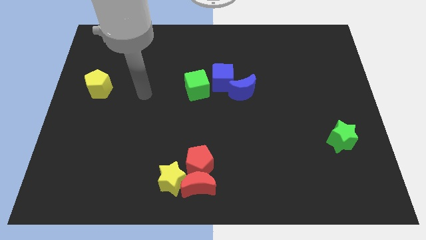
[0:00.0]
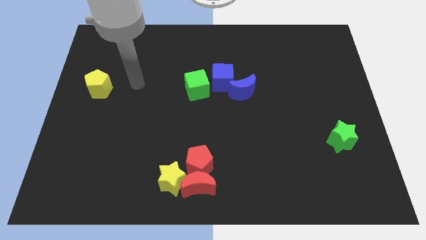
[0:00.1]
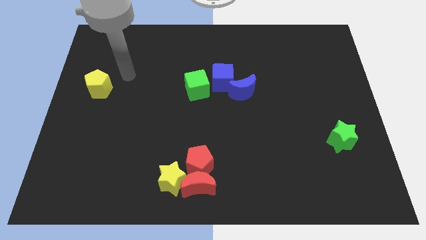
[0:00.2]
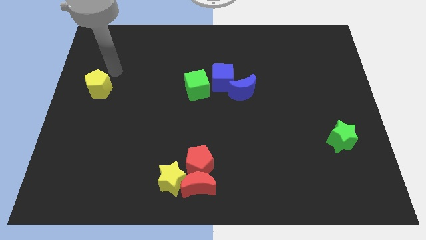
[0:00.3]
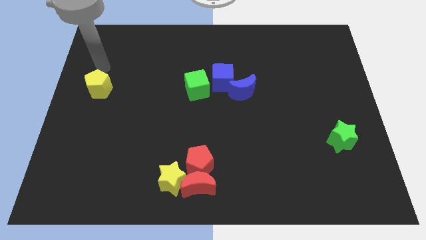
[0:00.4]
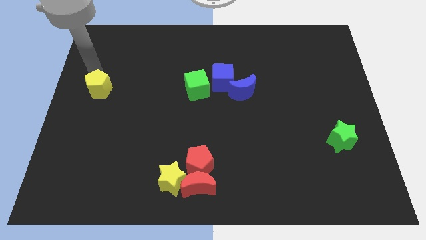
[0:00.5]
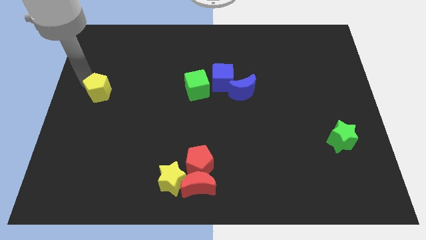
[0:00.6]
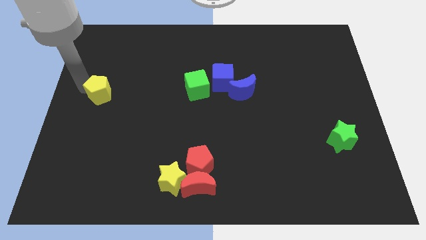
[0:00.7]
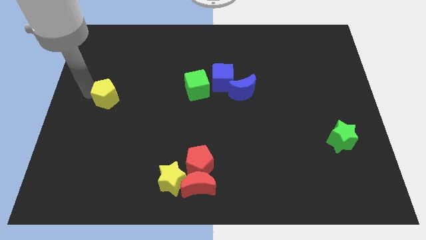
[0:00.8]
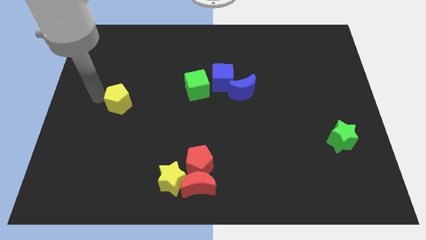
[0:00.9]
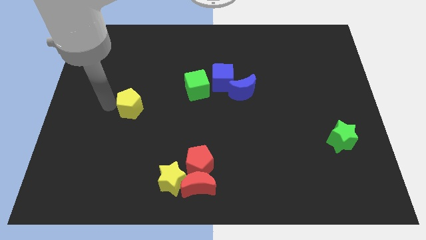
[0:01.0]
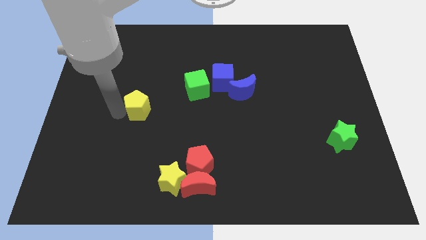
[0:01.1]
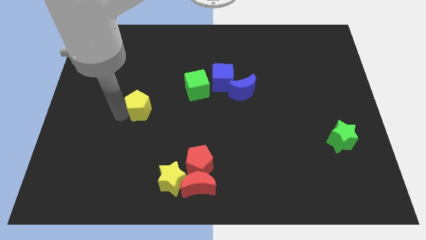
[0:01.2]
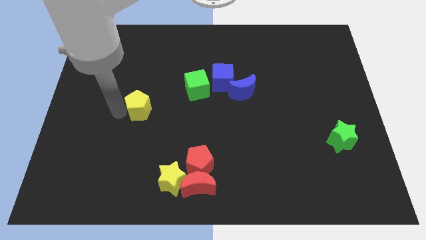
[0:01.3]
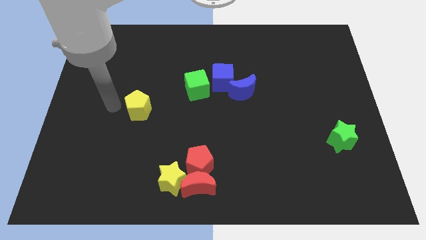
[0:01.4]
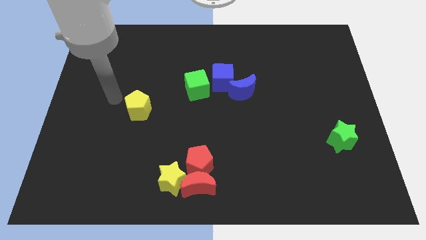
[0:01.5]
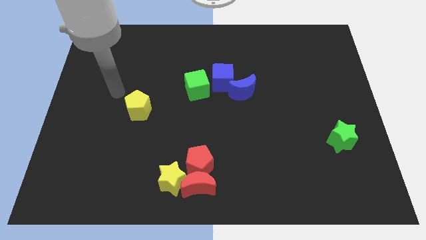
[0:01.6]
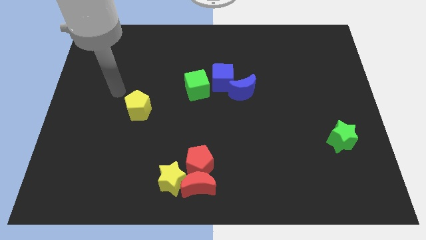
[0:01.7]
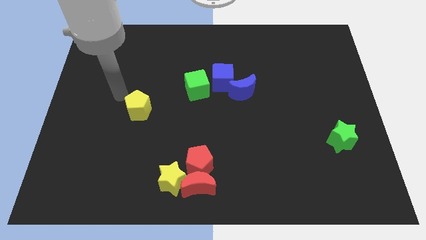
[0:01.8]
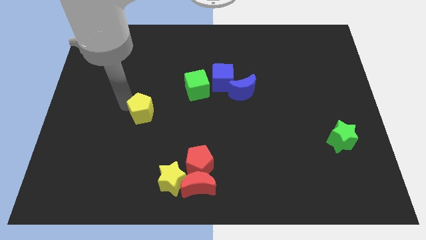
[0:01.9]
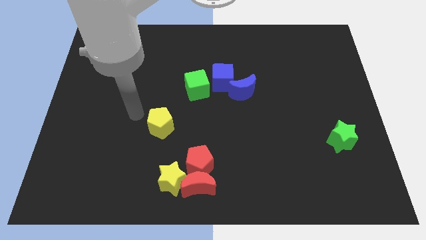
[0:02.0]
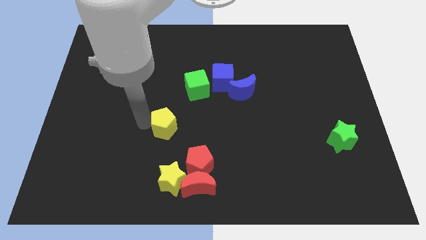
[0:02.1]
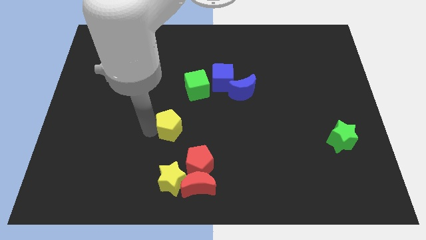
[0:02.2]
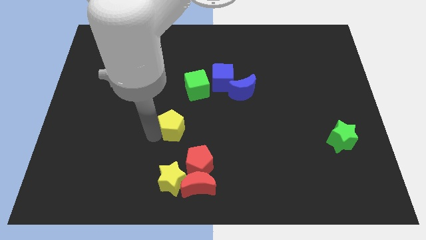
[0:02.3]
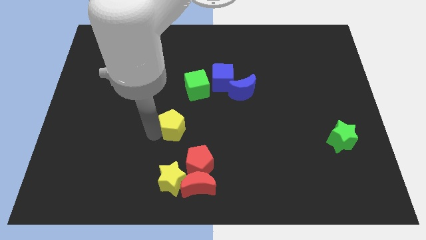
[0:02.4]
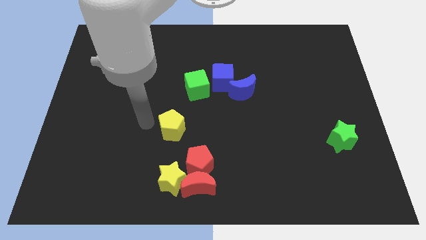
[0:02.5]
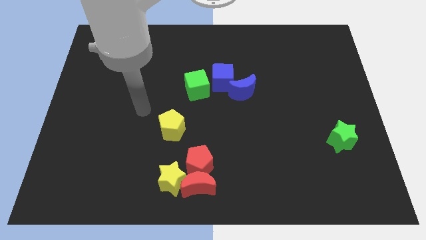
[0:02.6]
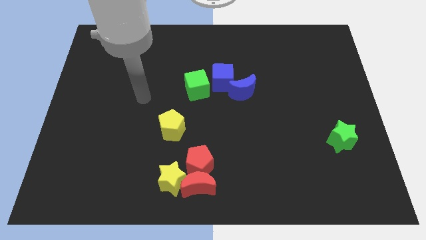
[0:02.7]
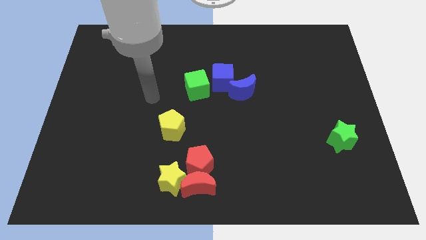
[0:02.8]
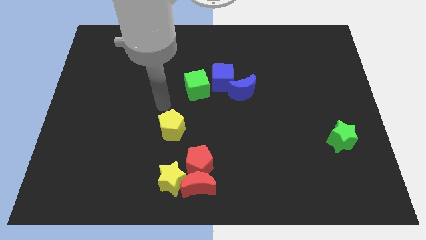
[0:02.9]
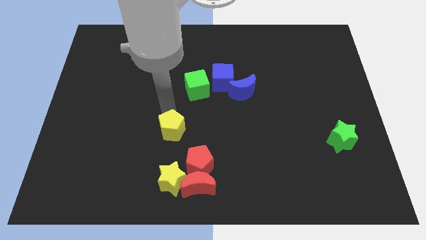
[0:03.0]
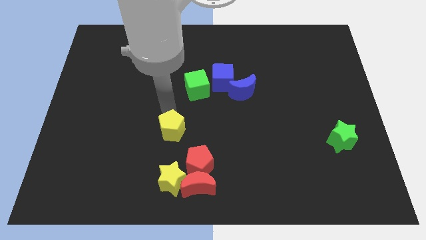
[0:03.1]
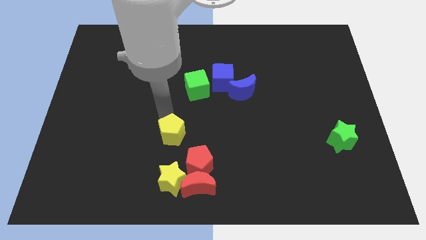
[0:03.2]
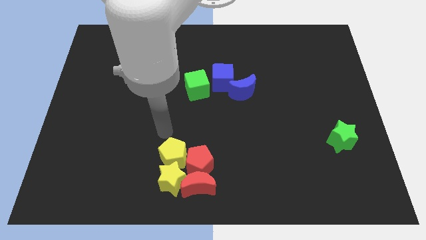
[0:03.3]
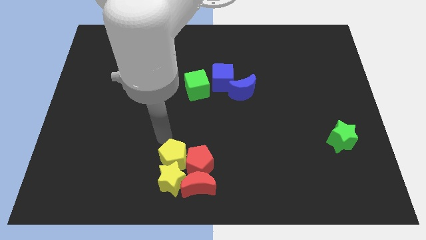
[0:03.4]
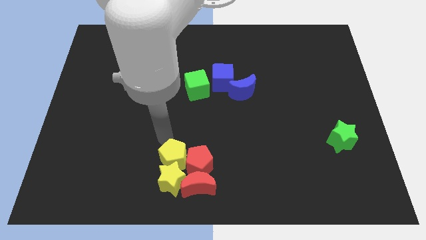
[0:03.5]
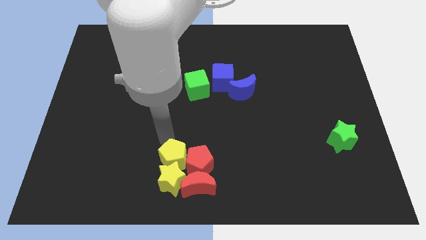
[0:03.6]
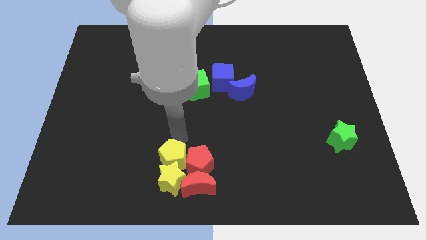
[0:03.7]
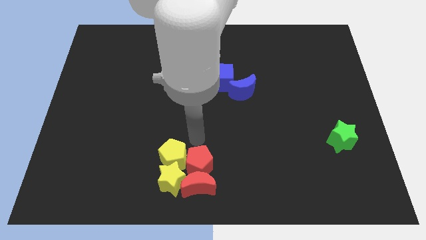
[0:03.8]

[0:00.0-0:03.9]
place yellow pentagon above the yellow star

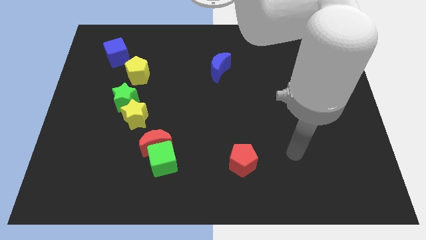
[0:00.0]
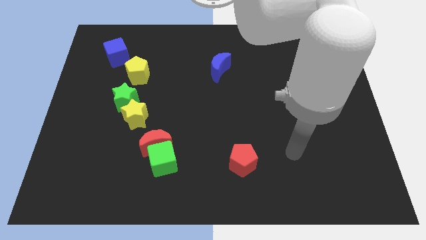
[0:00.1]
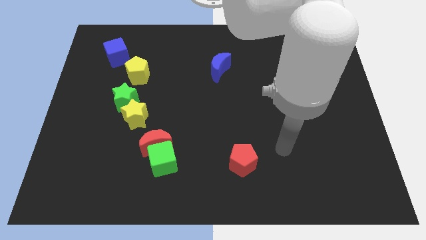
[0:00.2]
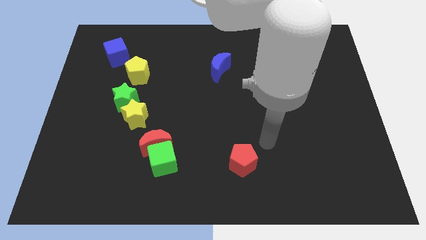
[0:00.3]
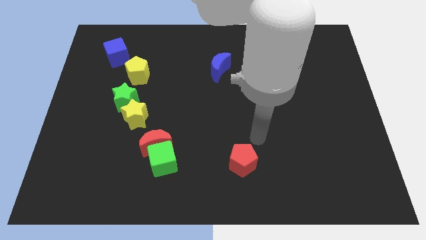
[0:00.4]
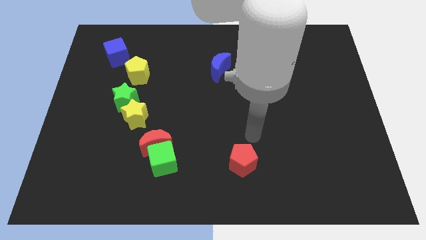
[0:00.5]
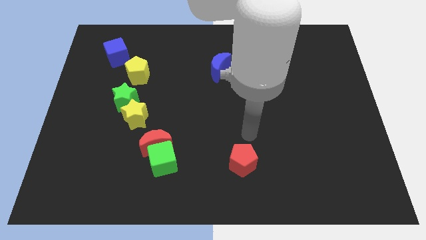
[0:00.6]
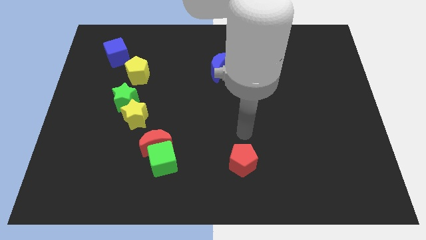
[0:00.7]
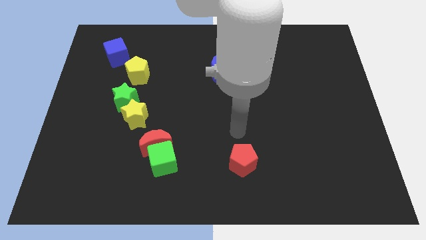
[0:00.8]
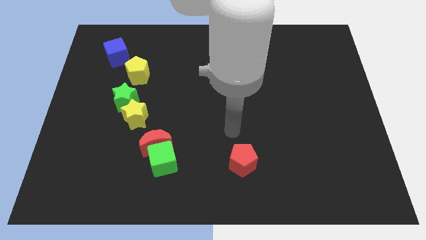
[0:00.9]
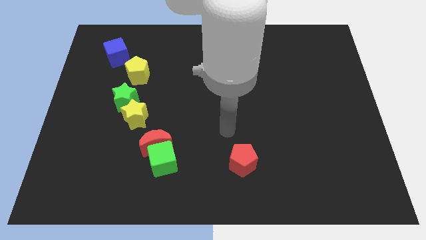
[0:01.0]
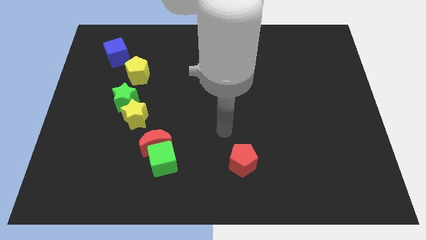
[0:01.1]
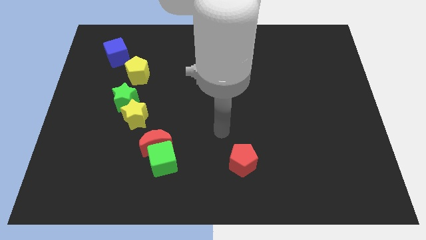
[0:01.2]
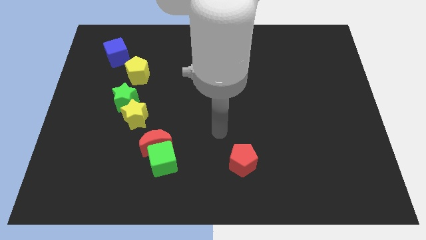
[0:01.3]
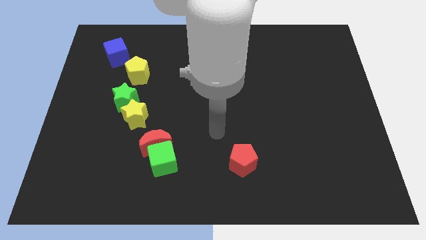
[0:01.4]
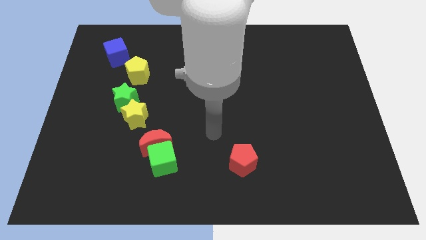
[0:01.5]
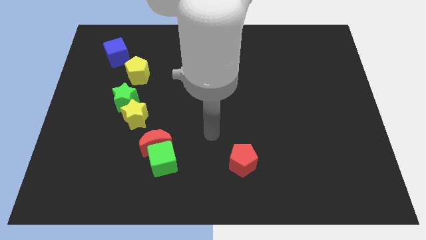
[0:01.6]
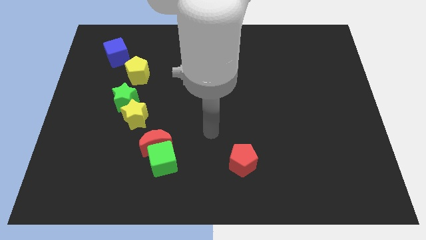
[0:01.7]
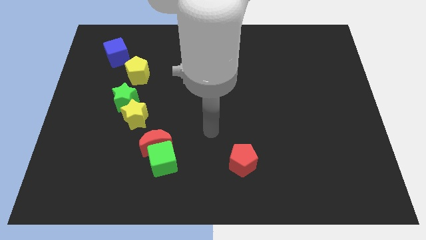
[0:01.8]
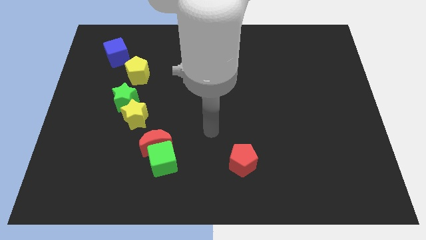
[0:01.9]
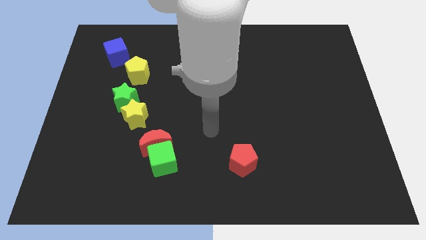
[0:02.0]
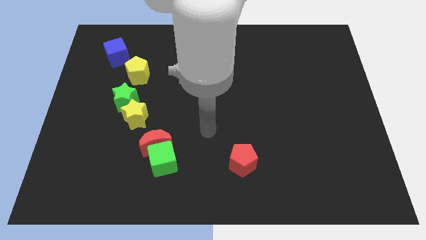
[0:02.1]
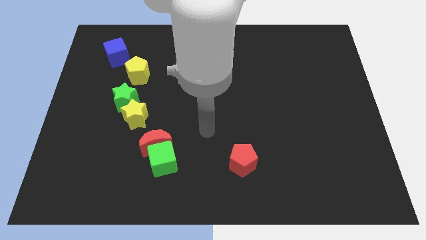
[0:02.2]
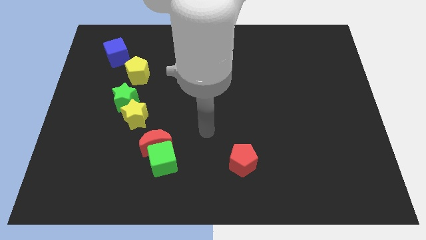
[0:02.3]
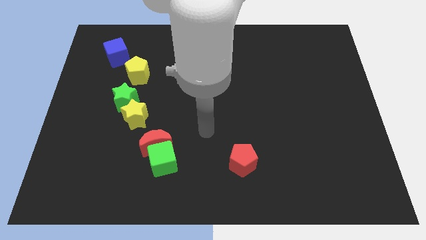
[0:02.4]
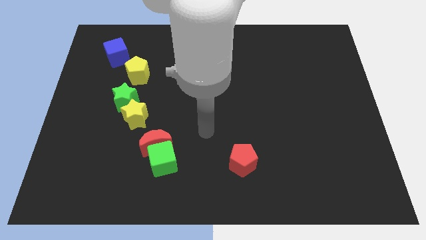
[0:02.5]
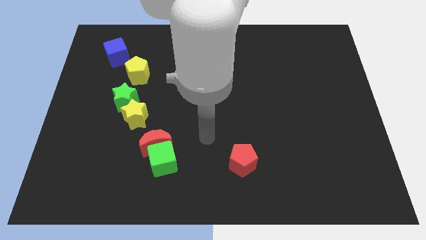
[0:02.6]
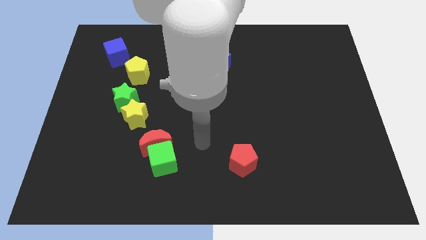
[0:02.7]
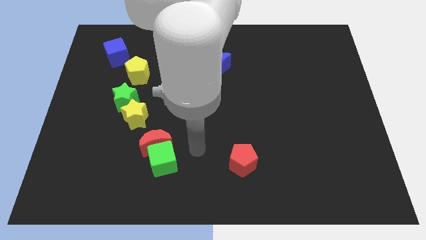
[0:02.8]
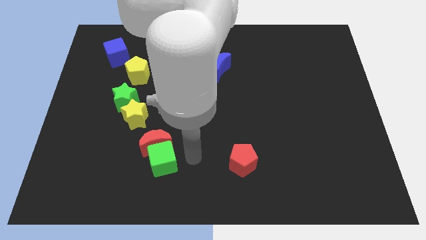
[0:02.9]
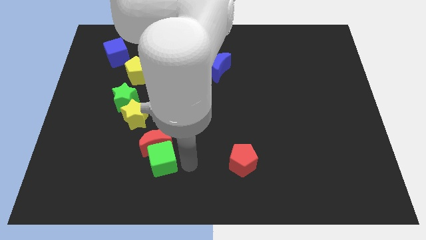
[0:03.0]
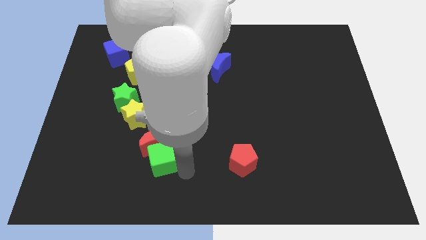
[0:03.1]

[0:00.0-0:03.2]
move the arm right to the green cube

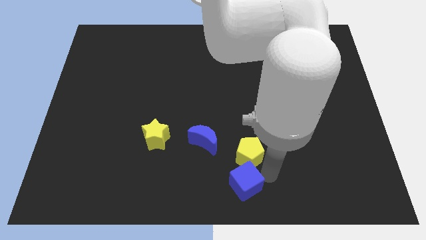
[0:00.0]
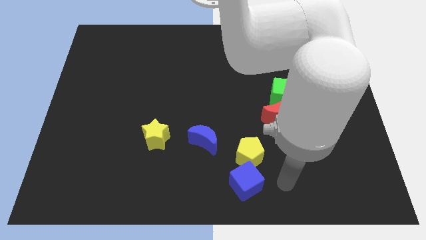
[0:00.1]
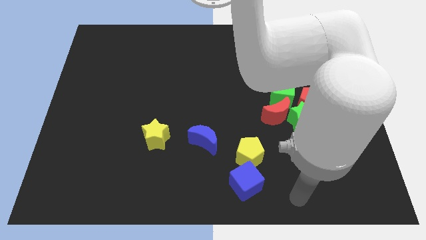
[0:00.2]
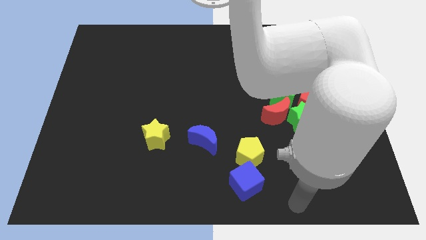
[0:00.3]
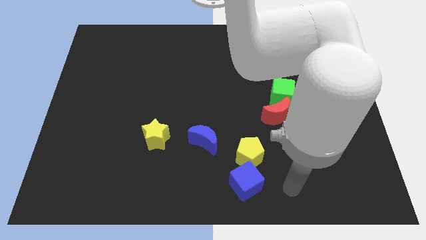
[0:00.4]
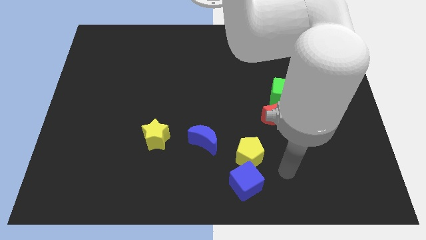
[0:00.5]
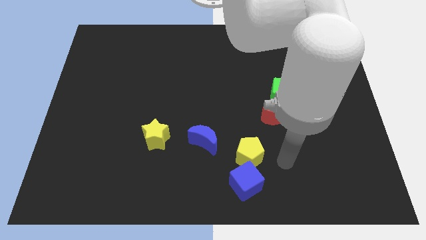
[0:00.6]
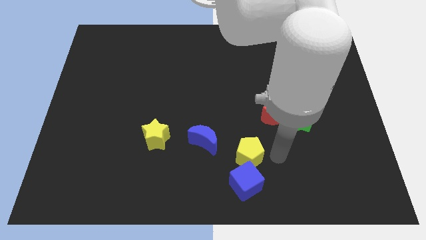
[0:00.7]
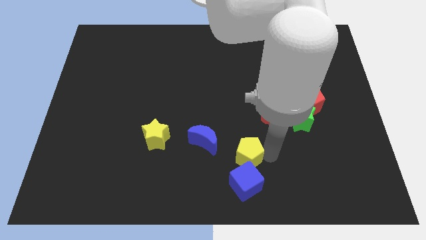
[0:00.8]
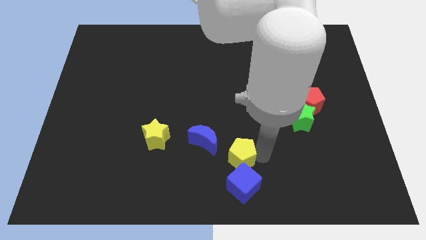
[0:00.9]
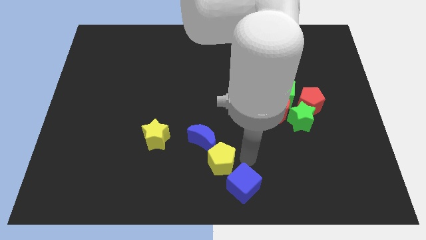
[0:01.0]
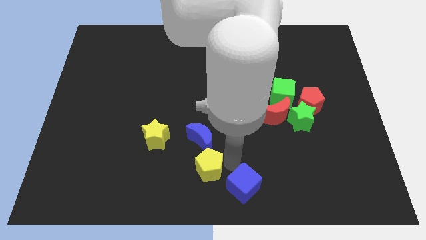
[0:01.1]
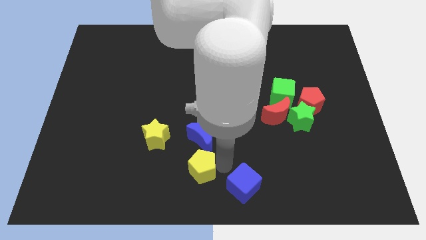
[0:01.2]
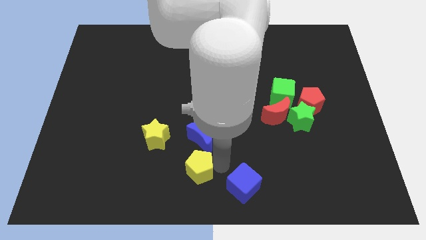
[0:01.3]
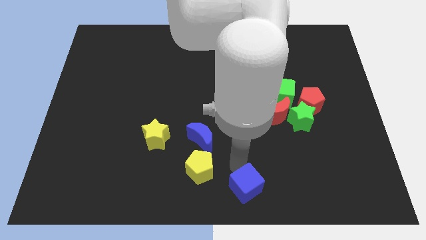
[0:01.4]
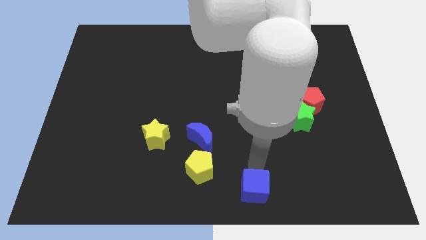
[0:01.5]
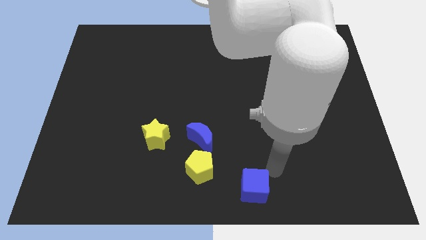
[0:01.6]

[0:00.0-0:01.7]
separate yellow pentagon and the blue cube

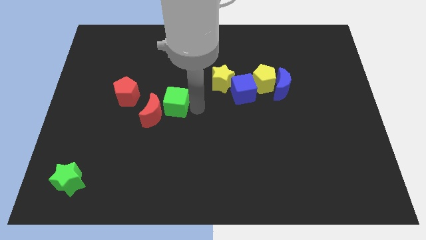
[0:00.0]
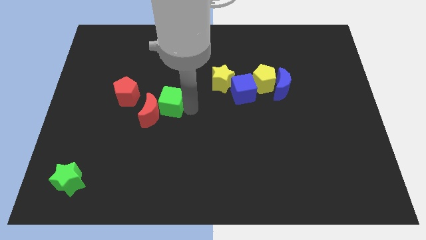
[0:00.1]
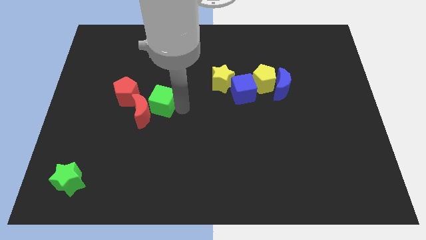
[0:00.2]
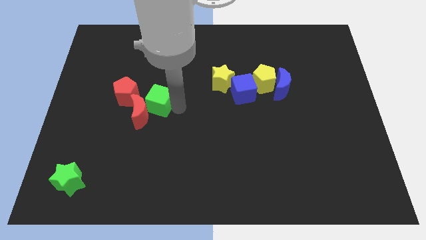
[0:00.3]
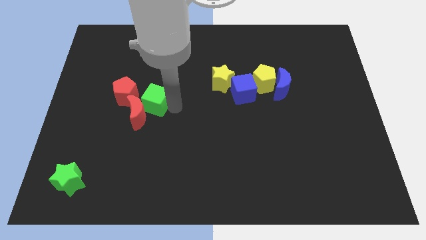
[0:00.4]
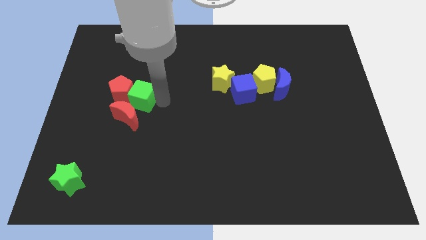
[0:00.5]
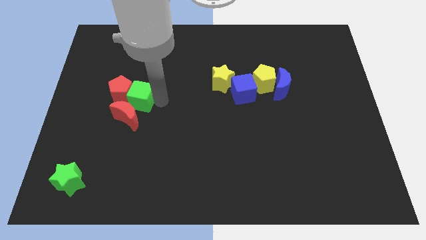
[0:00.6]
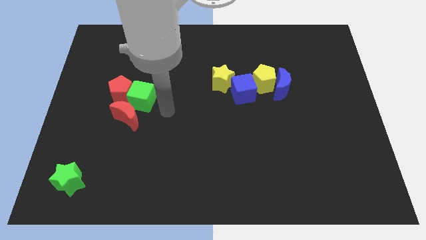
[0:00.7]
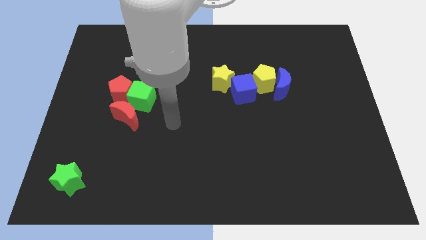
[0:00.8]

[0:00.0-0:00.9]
move green cube right above the red moon
